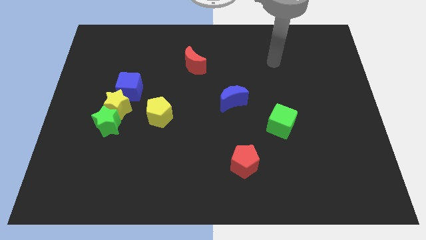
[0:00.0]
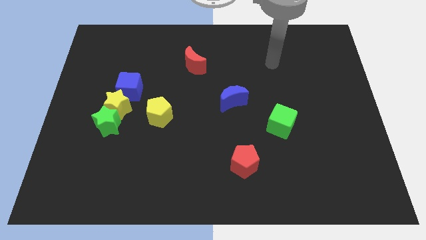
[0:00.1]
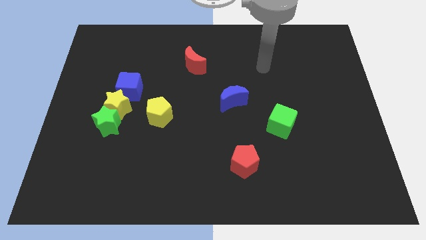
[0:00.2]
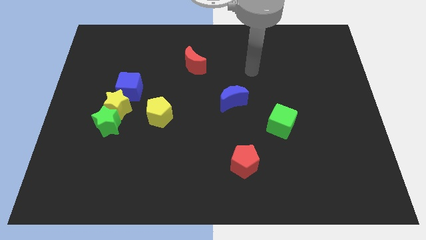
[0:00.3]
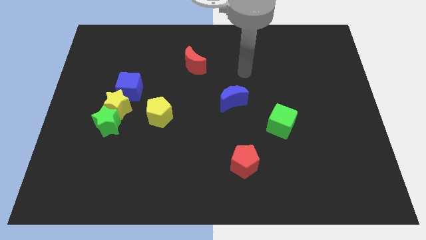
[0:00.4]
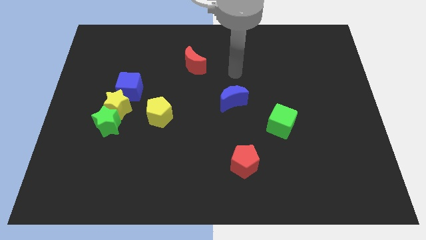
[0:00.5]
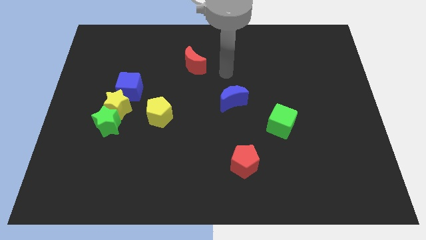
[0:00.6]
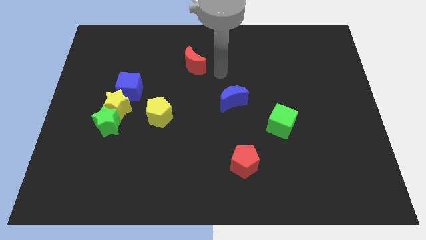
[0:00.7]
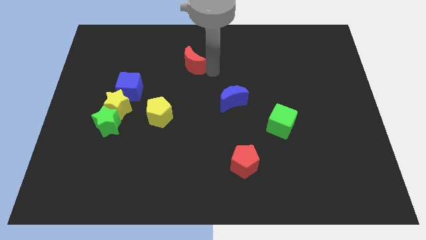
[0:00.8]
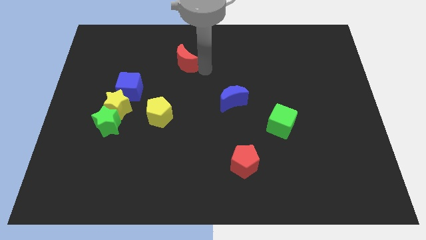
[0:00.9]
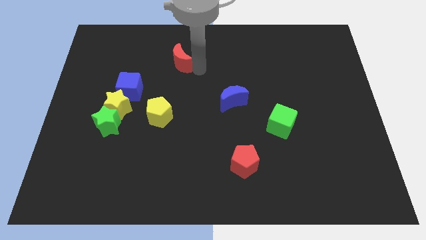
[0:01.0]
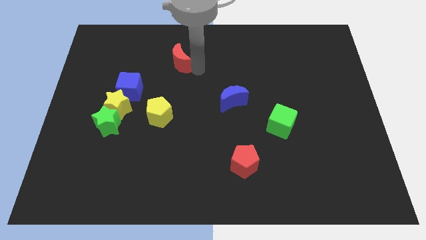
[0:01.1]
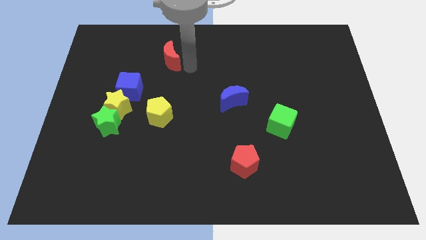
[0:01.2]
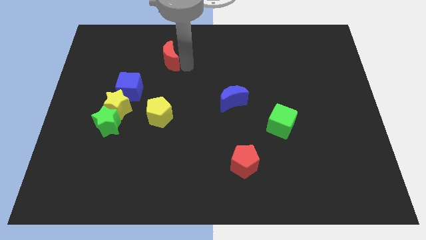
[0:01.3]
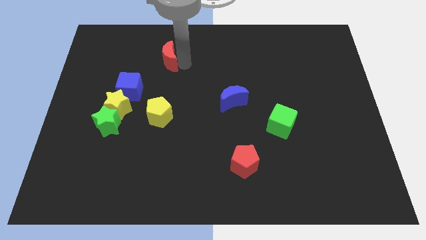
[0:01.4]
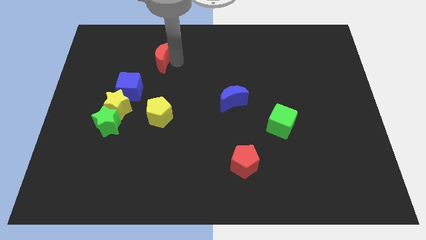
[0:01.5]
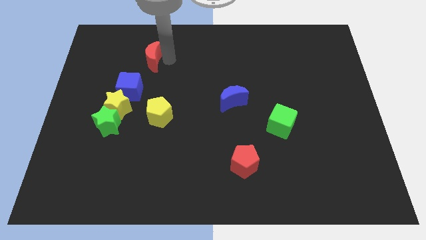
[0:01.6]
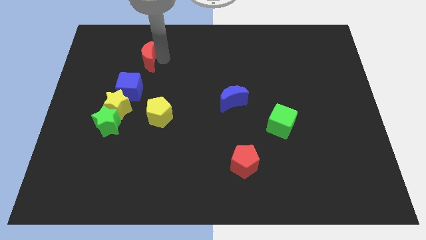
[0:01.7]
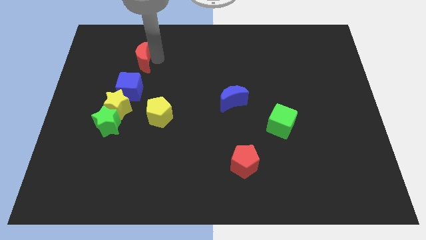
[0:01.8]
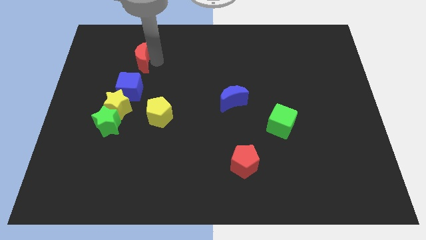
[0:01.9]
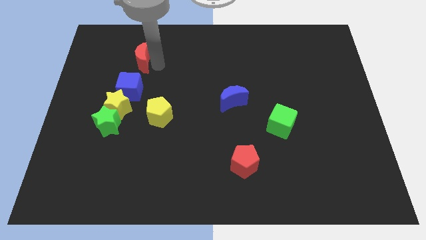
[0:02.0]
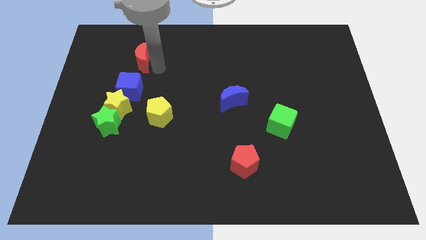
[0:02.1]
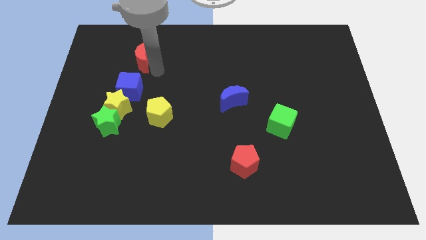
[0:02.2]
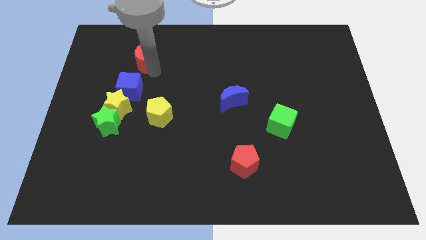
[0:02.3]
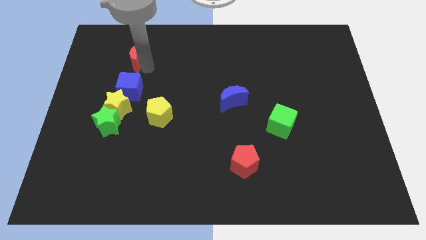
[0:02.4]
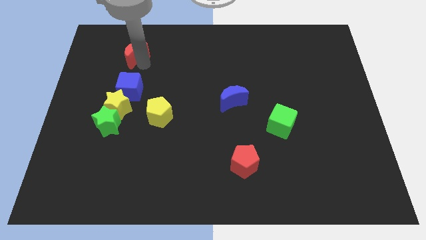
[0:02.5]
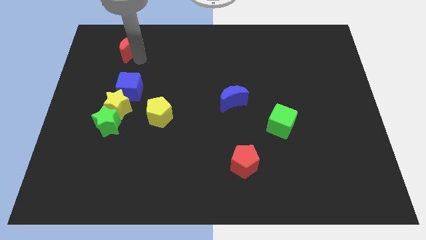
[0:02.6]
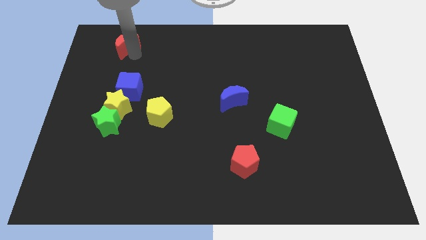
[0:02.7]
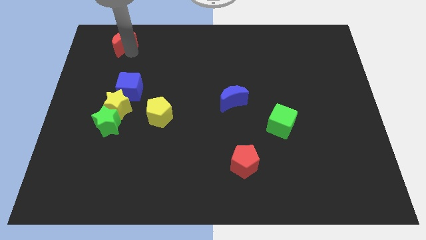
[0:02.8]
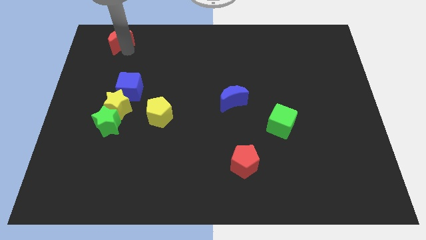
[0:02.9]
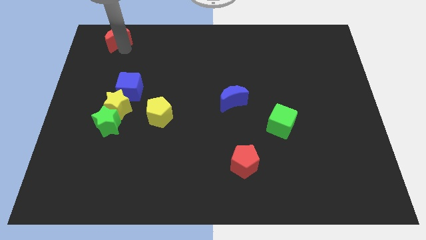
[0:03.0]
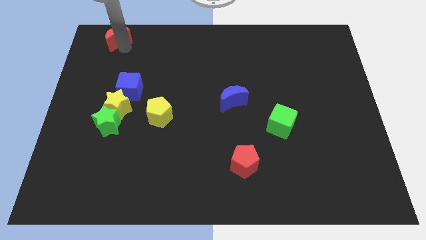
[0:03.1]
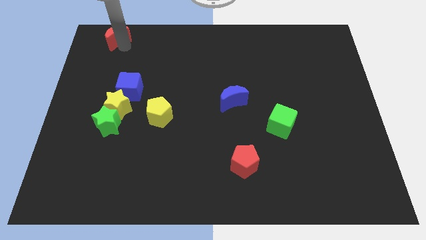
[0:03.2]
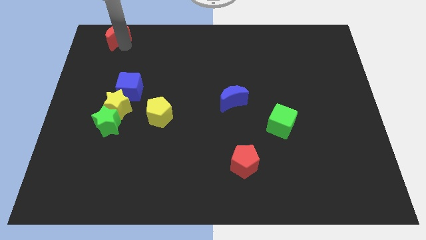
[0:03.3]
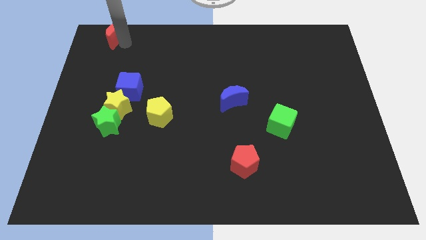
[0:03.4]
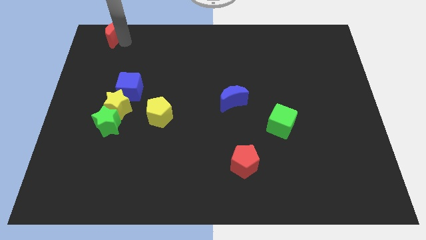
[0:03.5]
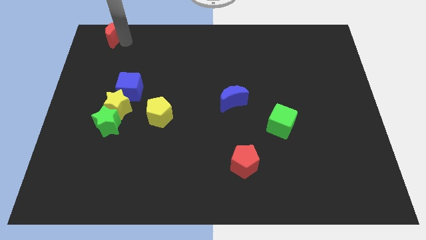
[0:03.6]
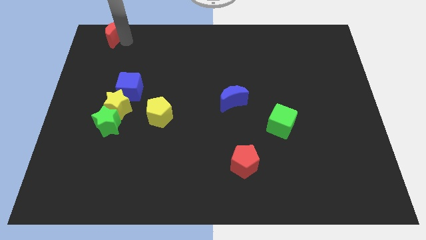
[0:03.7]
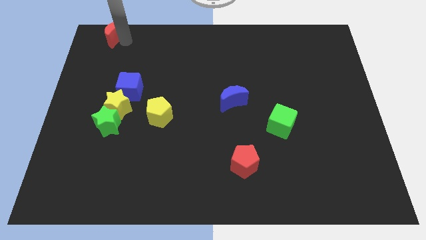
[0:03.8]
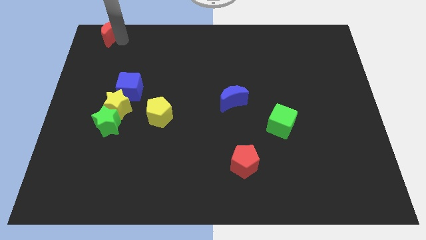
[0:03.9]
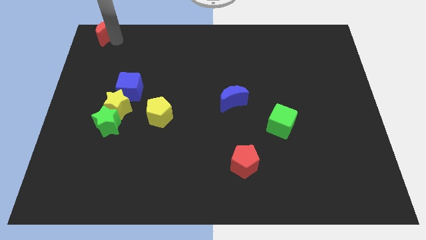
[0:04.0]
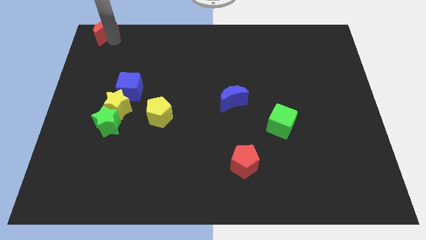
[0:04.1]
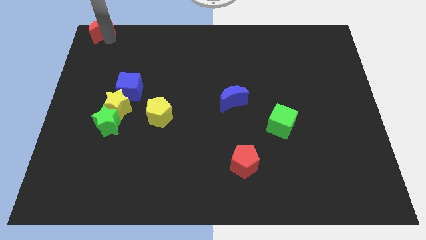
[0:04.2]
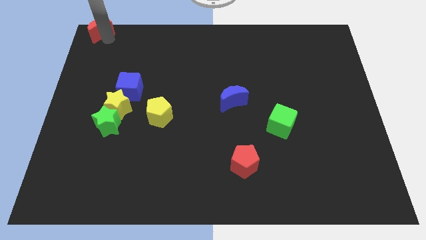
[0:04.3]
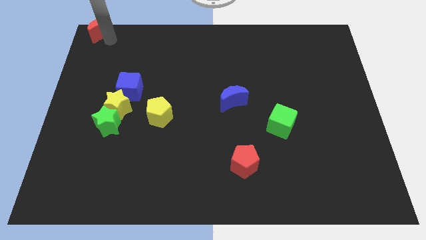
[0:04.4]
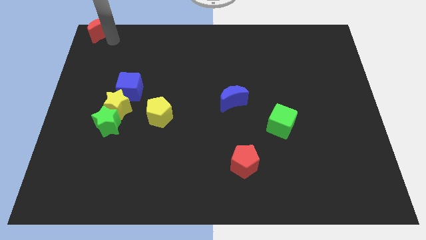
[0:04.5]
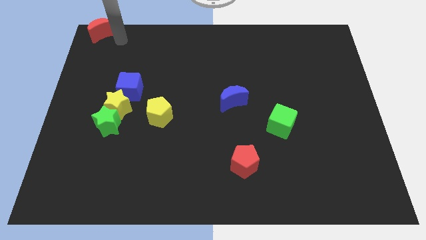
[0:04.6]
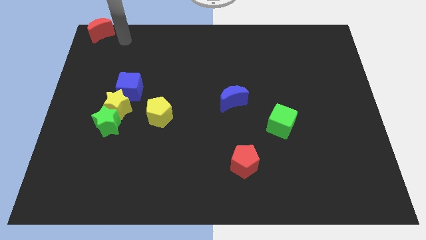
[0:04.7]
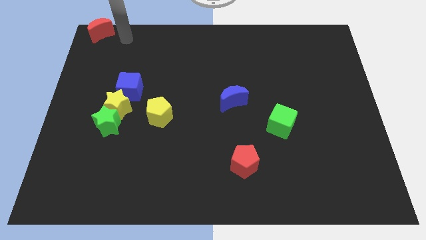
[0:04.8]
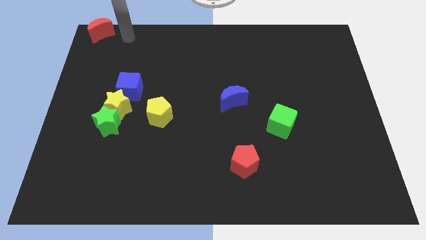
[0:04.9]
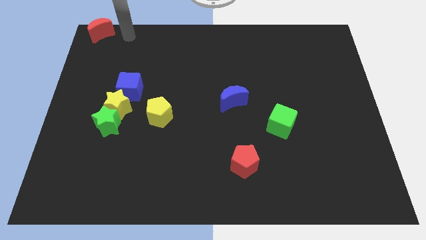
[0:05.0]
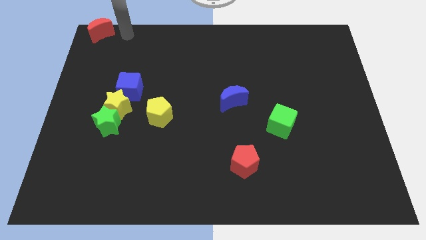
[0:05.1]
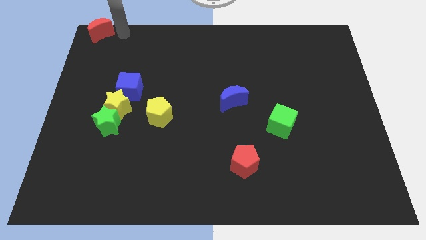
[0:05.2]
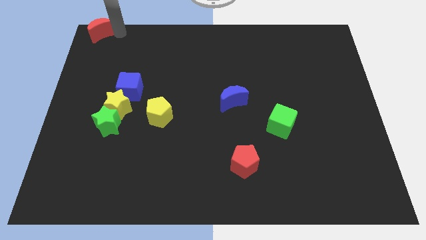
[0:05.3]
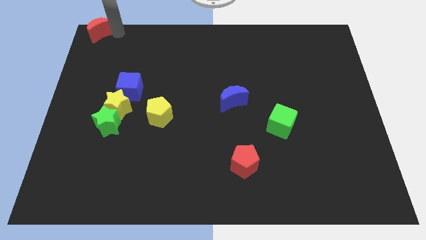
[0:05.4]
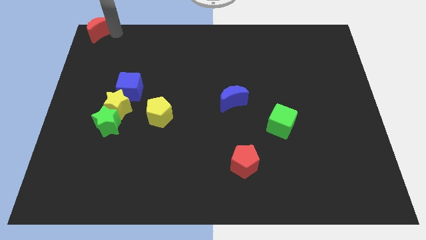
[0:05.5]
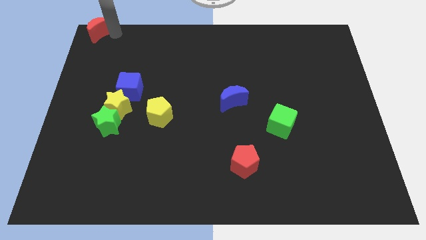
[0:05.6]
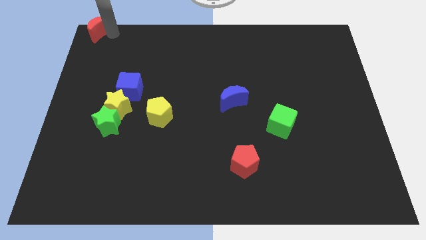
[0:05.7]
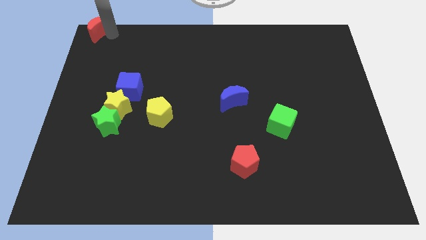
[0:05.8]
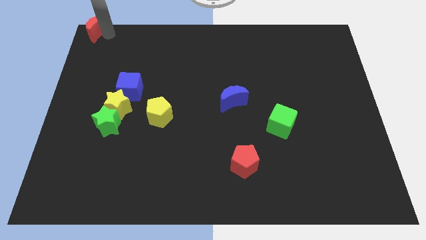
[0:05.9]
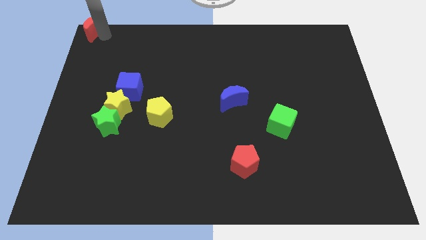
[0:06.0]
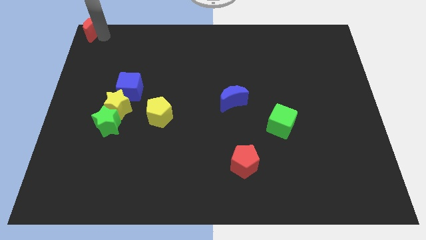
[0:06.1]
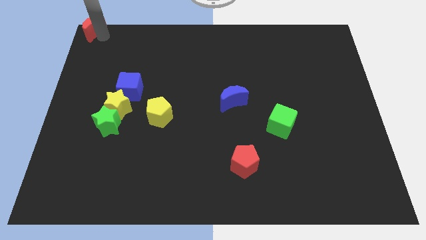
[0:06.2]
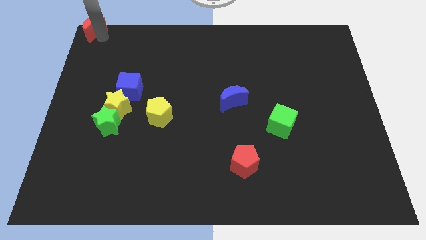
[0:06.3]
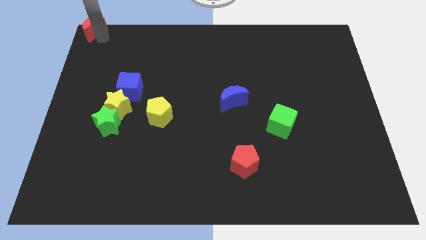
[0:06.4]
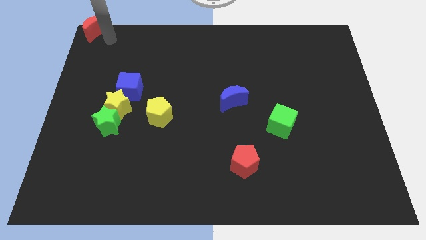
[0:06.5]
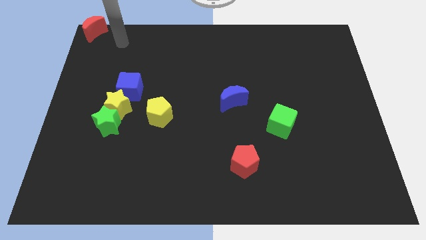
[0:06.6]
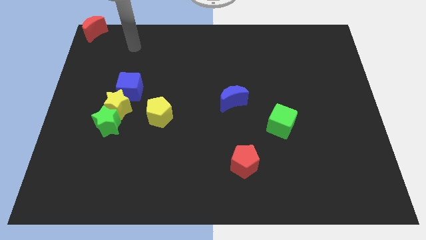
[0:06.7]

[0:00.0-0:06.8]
push the red crescent to the top left corner

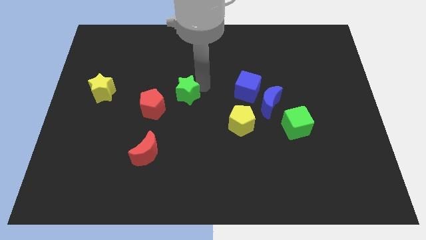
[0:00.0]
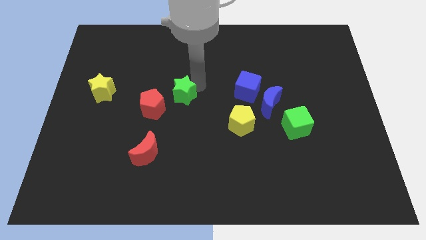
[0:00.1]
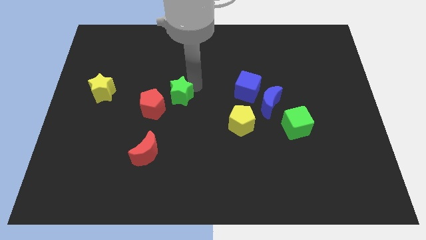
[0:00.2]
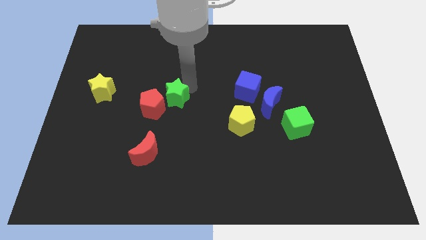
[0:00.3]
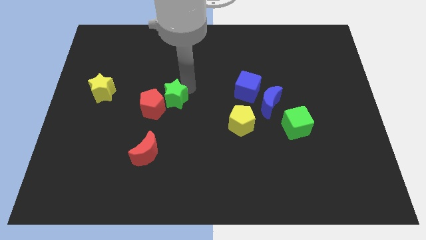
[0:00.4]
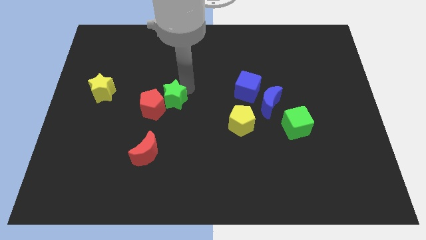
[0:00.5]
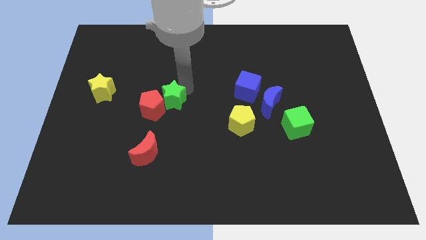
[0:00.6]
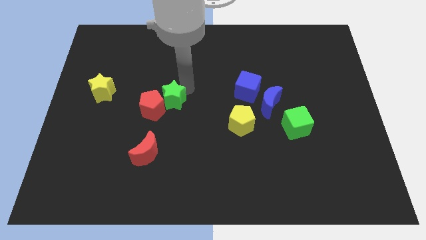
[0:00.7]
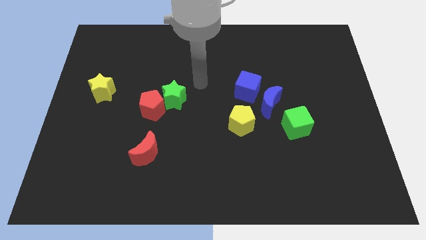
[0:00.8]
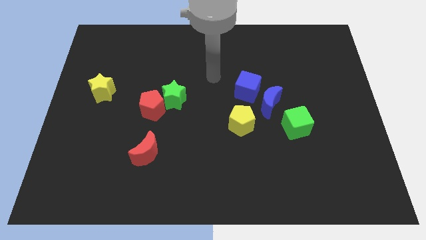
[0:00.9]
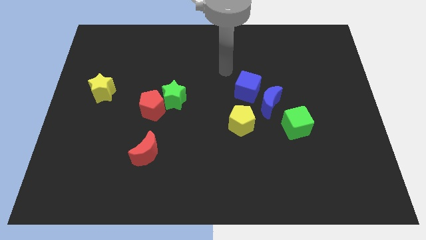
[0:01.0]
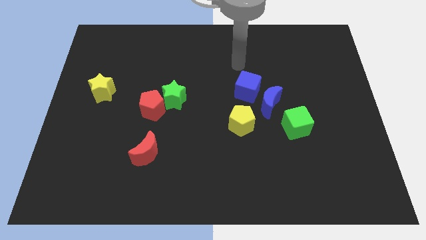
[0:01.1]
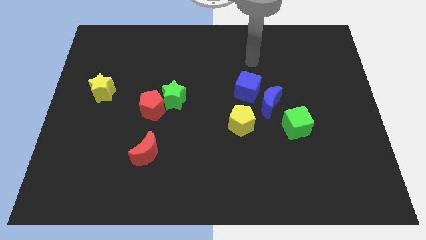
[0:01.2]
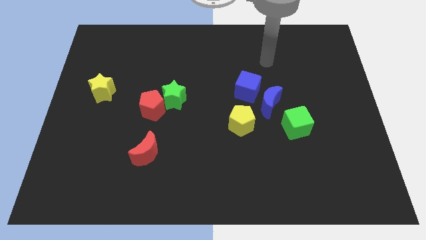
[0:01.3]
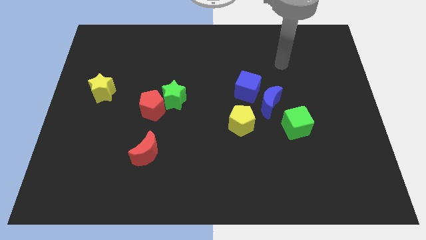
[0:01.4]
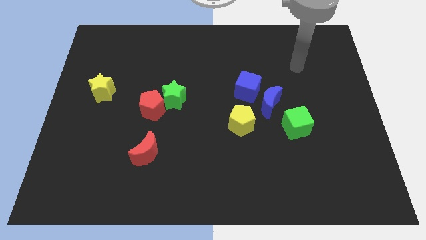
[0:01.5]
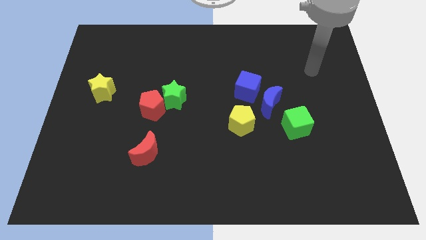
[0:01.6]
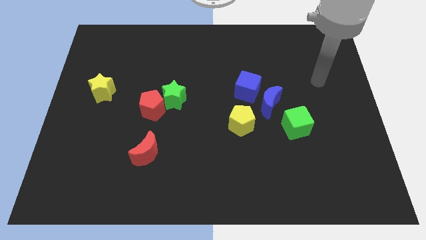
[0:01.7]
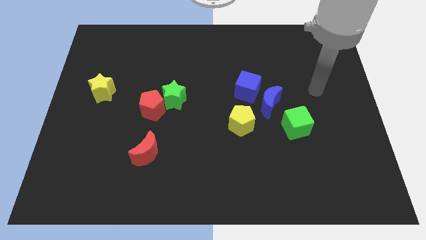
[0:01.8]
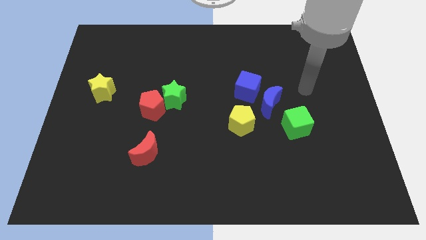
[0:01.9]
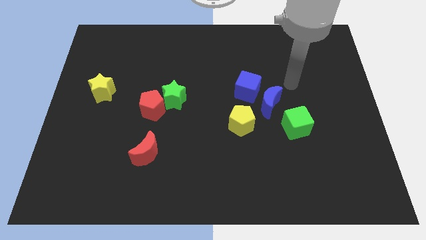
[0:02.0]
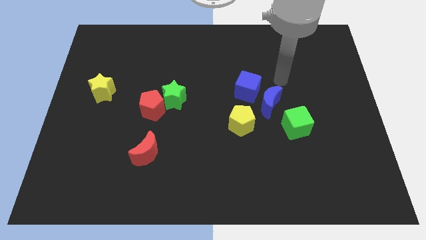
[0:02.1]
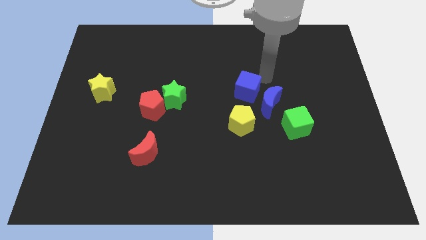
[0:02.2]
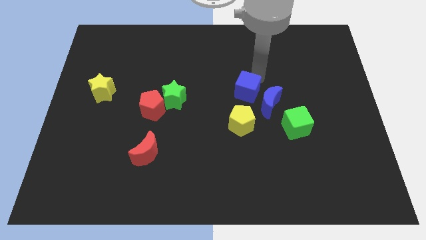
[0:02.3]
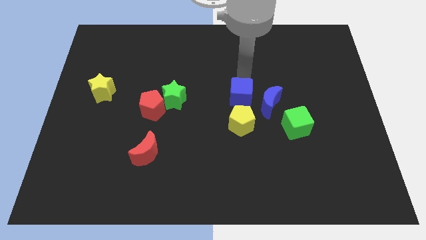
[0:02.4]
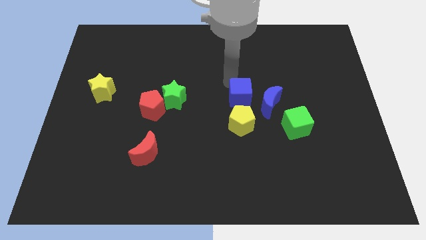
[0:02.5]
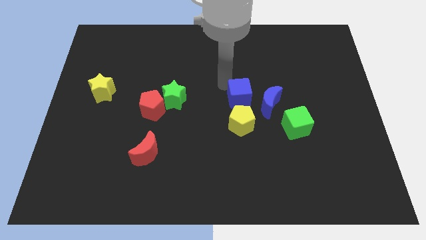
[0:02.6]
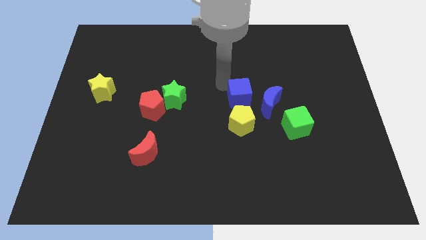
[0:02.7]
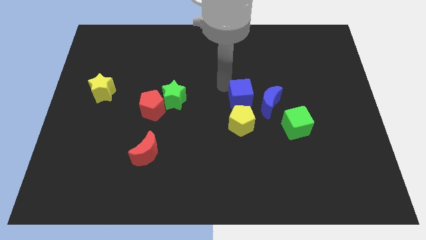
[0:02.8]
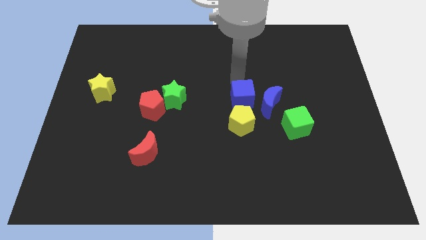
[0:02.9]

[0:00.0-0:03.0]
place blue cube above yellow pentagon
